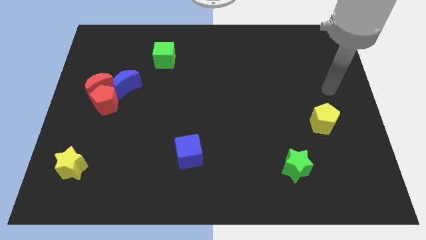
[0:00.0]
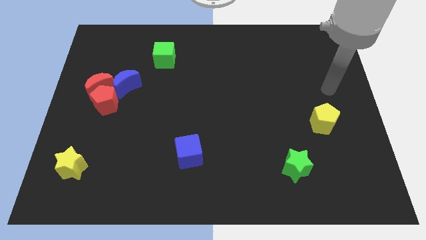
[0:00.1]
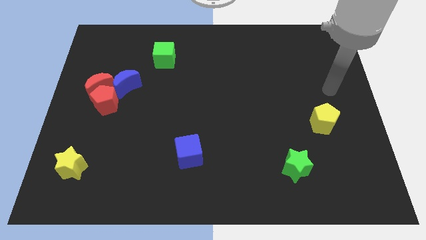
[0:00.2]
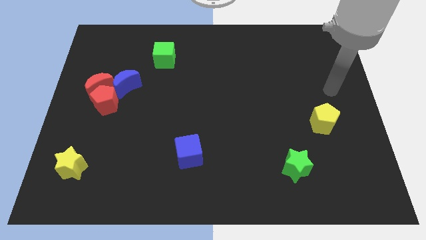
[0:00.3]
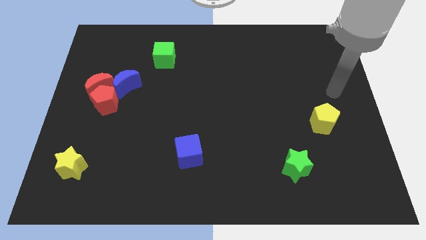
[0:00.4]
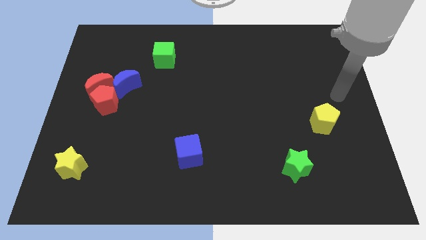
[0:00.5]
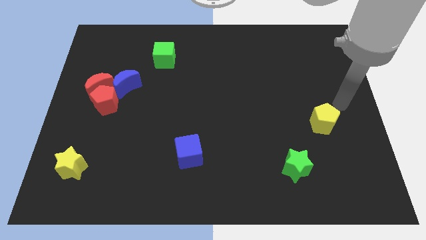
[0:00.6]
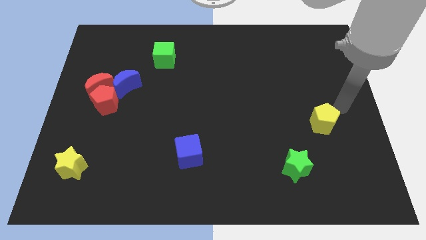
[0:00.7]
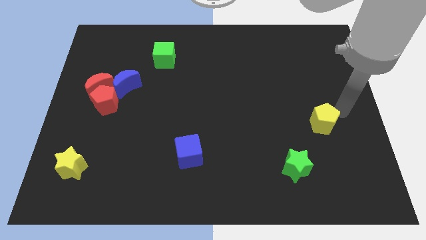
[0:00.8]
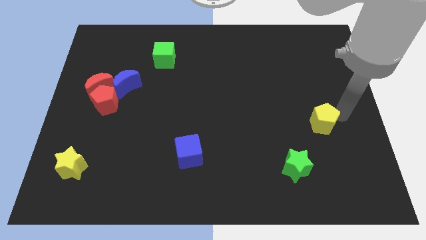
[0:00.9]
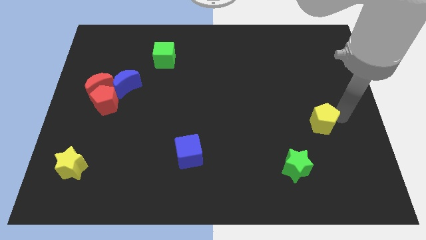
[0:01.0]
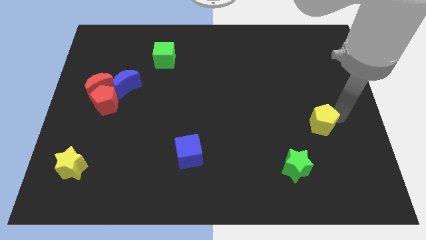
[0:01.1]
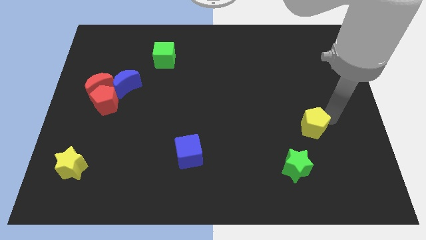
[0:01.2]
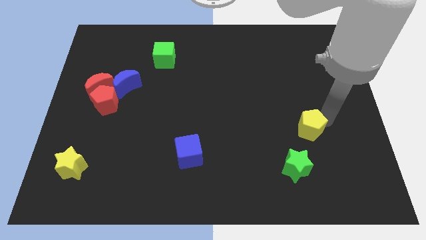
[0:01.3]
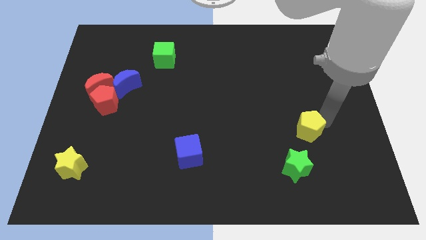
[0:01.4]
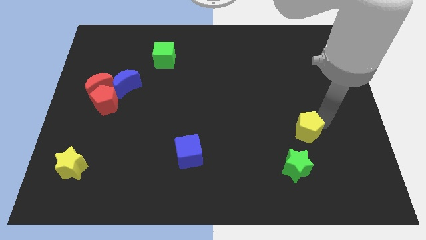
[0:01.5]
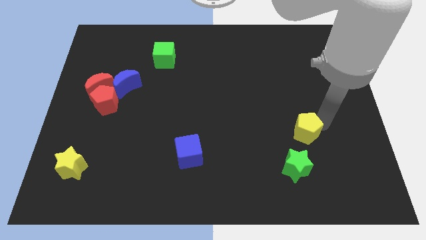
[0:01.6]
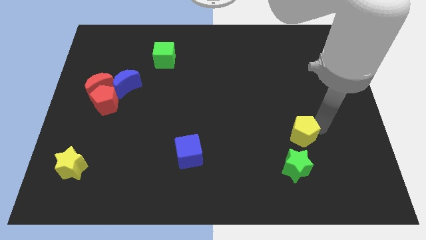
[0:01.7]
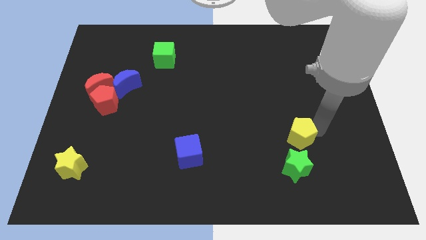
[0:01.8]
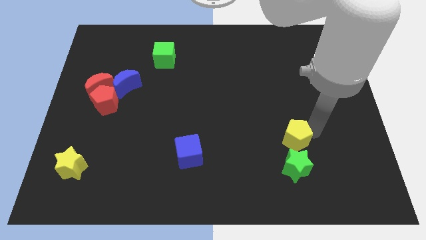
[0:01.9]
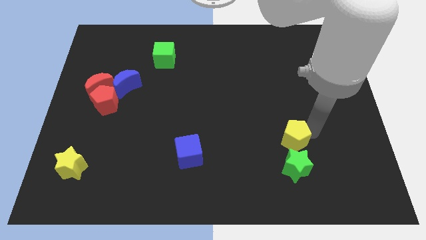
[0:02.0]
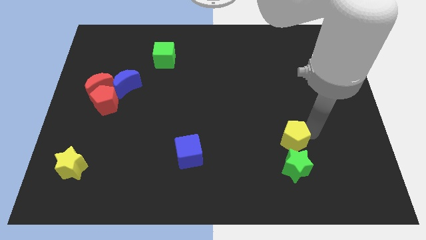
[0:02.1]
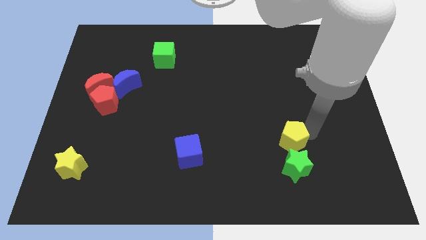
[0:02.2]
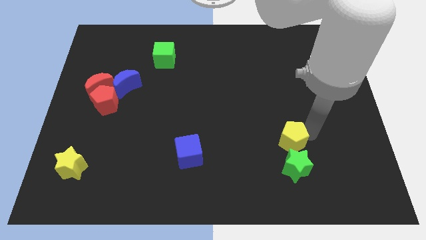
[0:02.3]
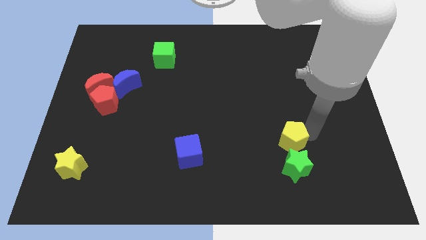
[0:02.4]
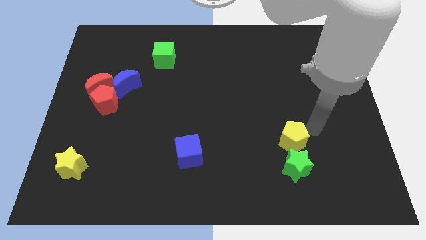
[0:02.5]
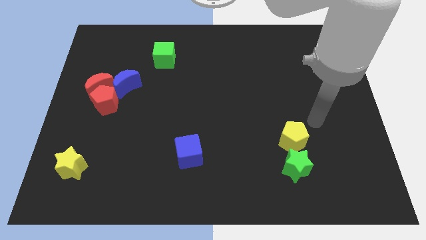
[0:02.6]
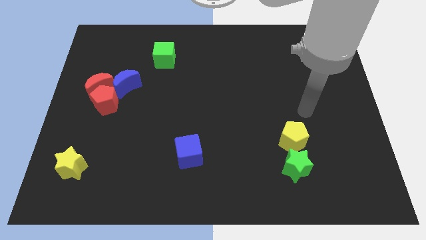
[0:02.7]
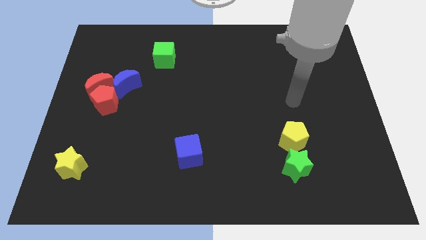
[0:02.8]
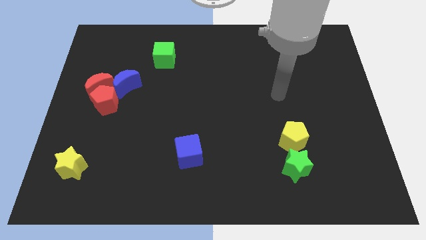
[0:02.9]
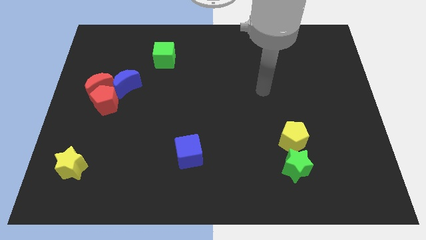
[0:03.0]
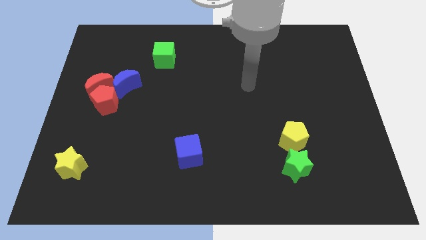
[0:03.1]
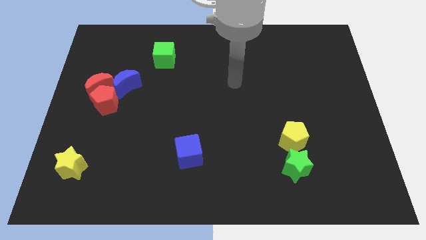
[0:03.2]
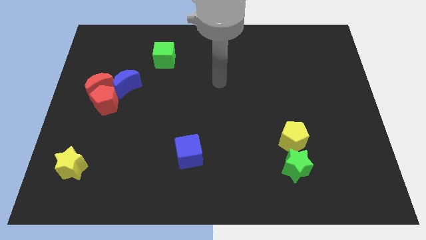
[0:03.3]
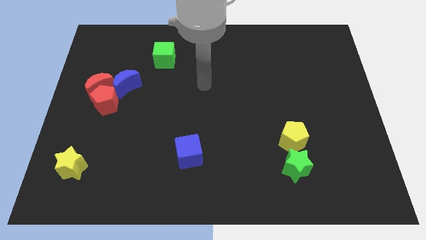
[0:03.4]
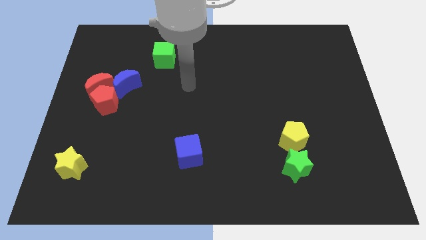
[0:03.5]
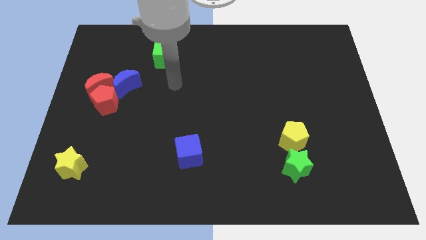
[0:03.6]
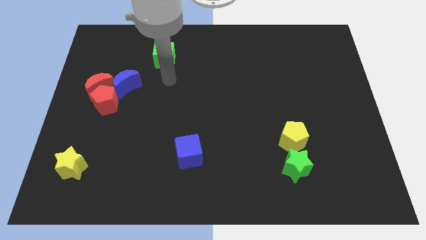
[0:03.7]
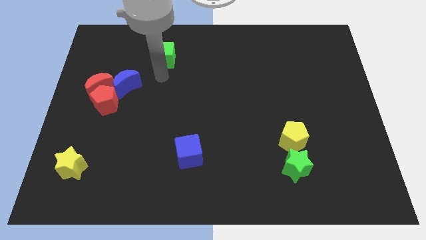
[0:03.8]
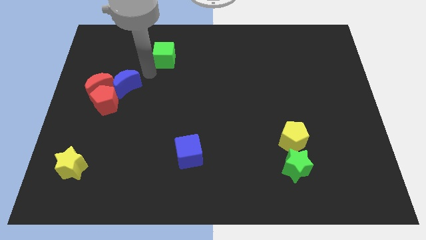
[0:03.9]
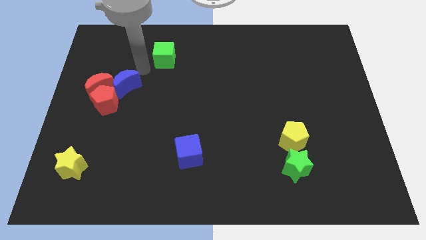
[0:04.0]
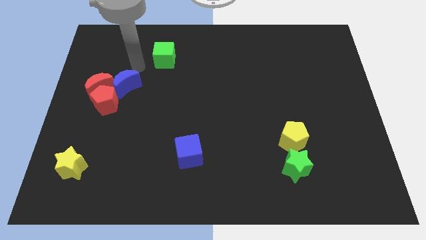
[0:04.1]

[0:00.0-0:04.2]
push the yellow pentagon towards the green star

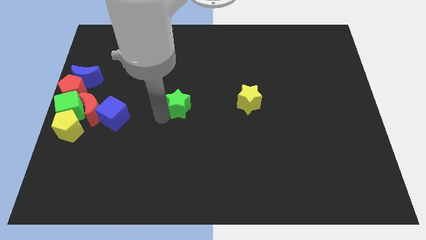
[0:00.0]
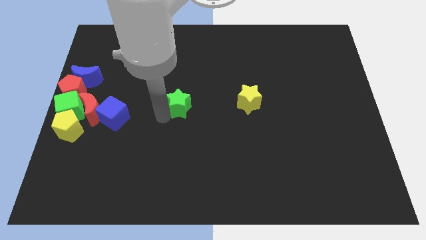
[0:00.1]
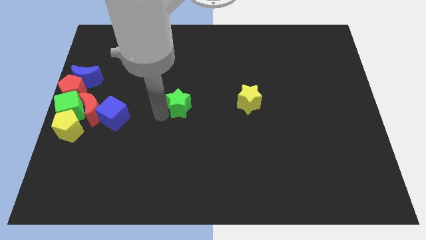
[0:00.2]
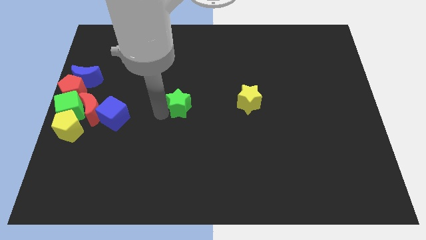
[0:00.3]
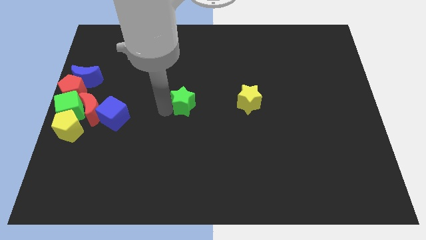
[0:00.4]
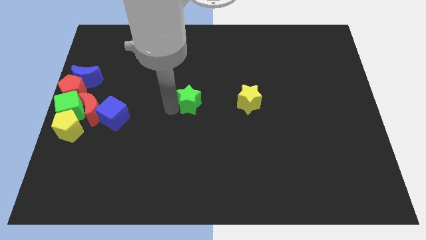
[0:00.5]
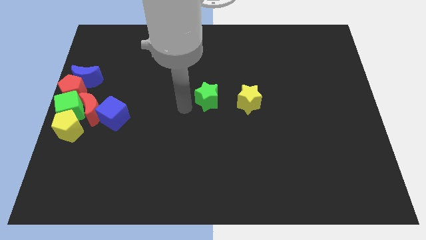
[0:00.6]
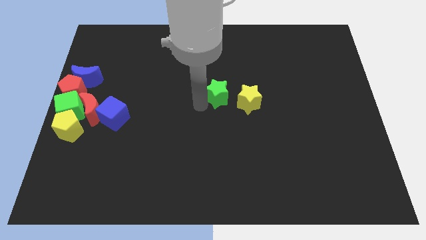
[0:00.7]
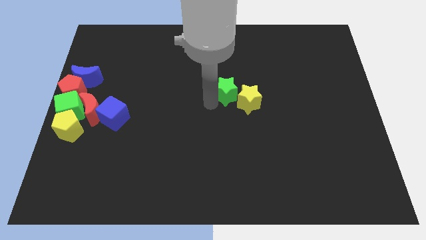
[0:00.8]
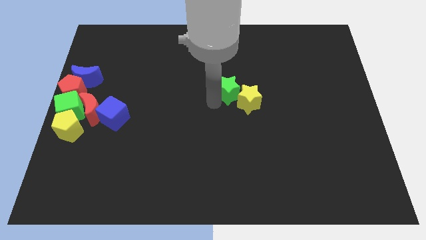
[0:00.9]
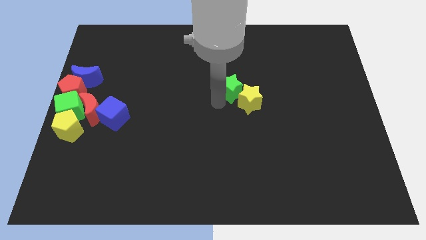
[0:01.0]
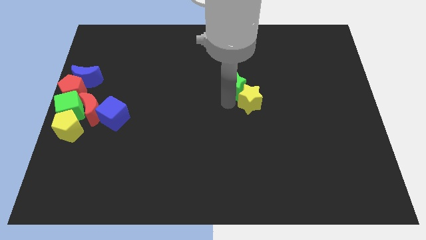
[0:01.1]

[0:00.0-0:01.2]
push the green star into the yellow star

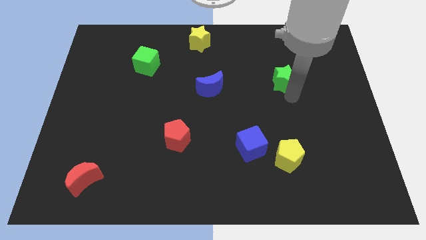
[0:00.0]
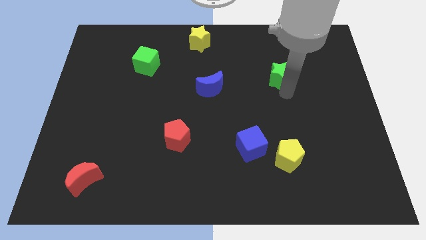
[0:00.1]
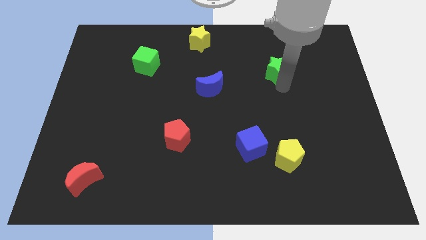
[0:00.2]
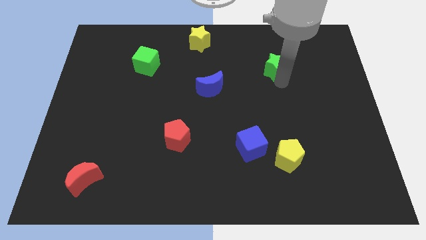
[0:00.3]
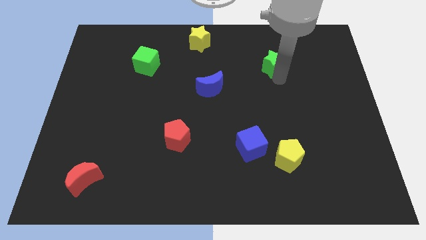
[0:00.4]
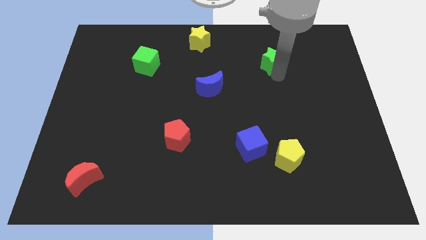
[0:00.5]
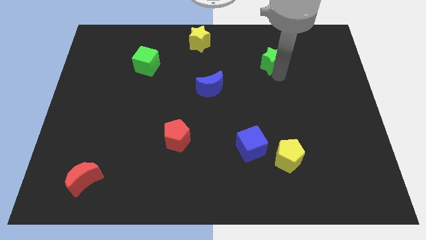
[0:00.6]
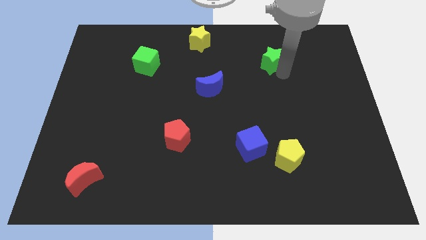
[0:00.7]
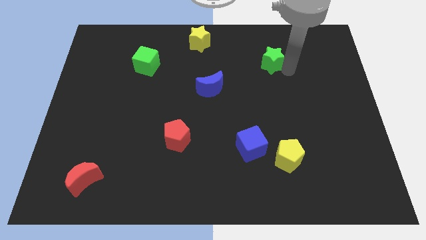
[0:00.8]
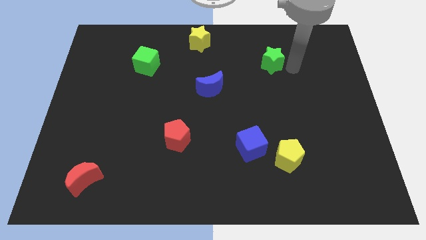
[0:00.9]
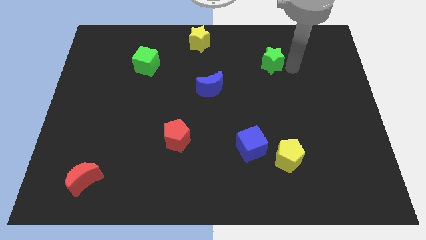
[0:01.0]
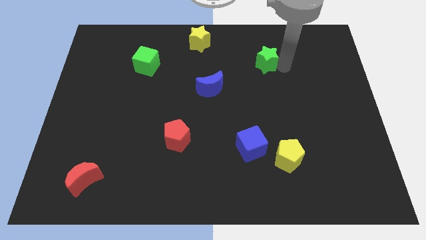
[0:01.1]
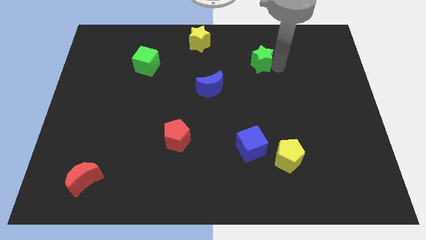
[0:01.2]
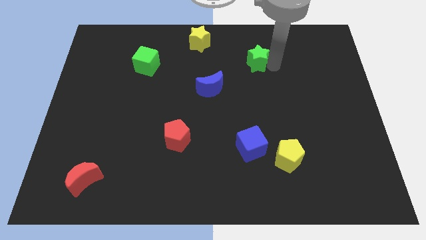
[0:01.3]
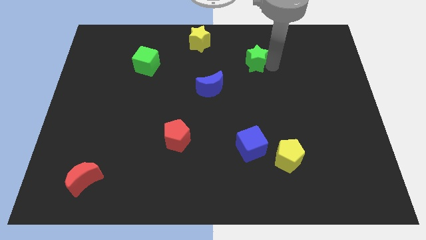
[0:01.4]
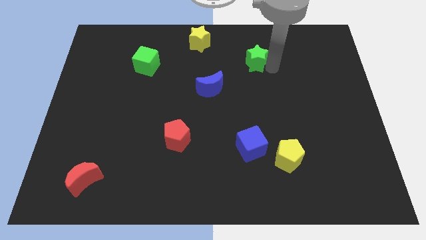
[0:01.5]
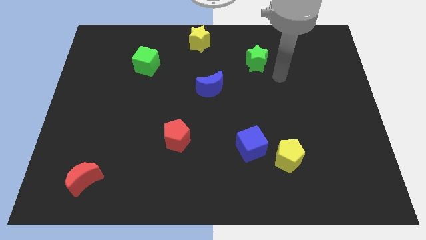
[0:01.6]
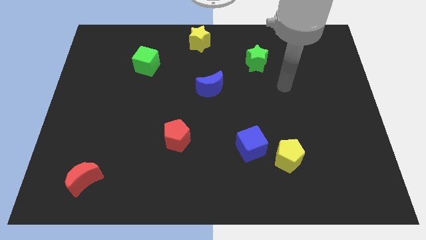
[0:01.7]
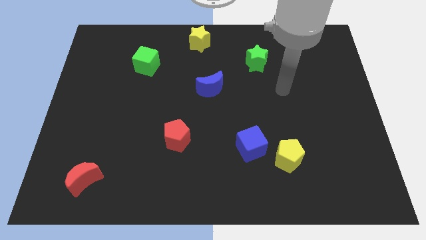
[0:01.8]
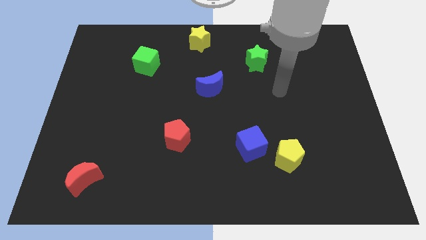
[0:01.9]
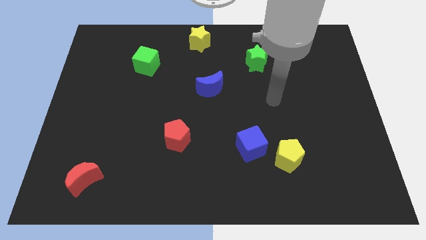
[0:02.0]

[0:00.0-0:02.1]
move green star diagonal to blue moon

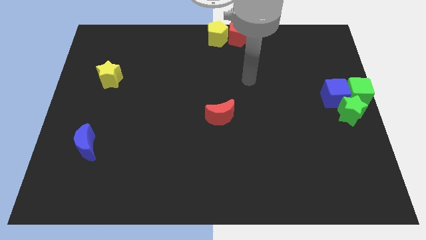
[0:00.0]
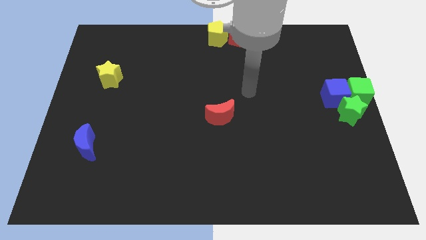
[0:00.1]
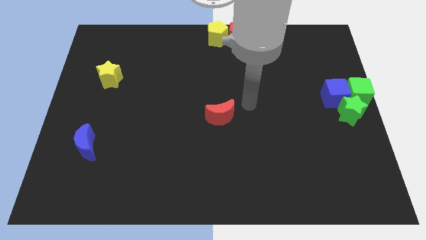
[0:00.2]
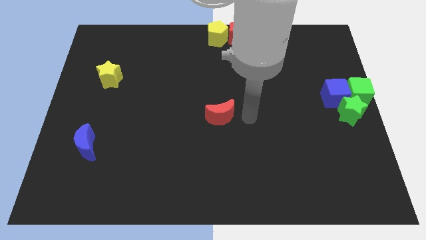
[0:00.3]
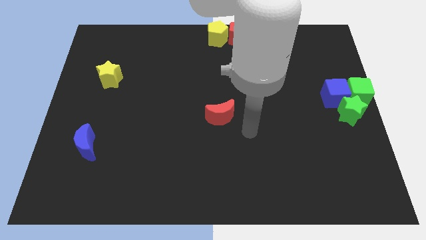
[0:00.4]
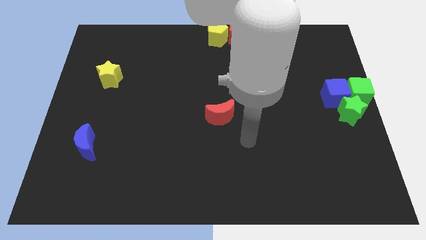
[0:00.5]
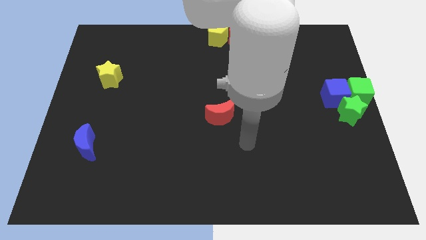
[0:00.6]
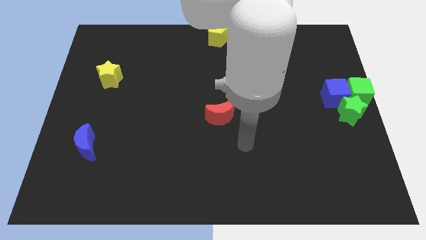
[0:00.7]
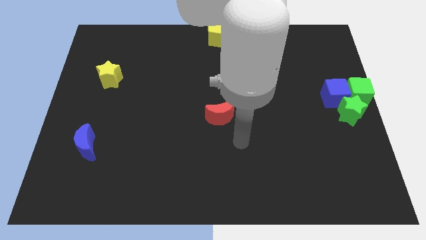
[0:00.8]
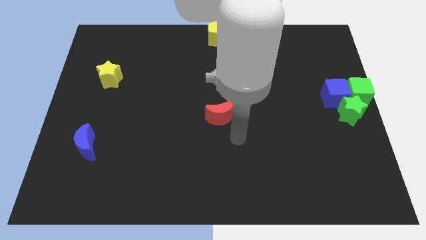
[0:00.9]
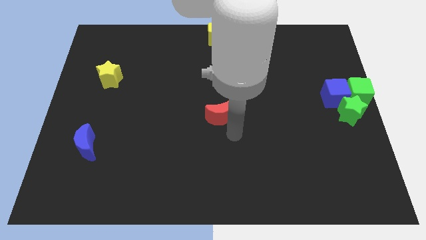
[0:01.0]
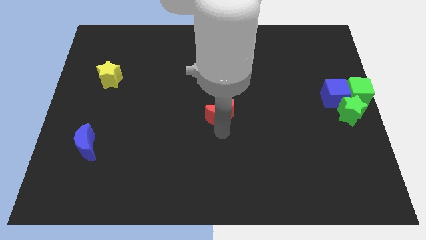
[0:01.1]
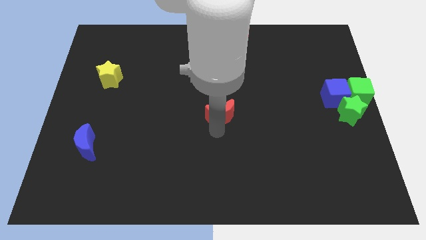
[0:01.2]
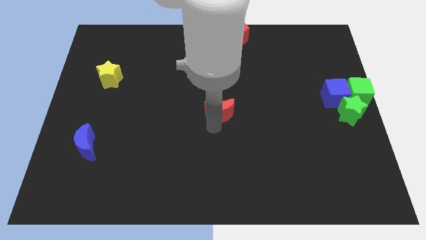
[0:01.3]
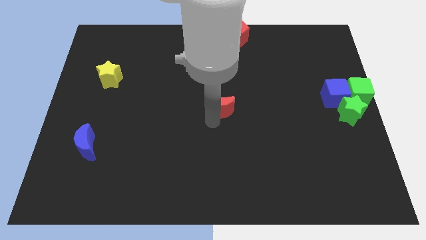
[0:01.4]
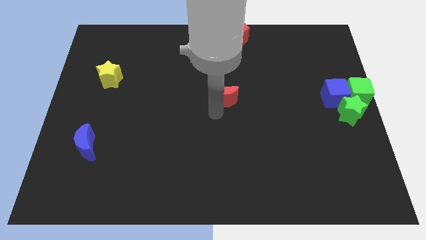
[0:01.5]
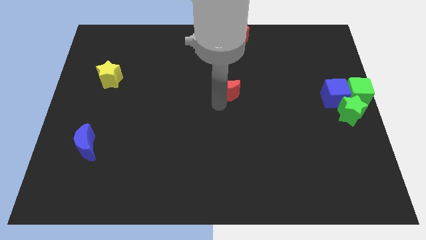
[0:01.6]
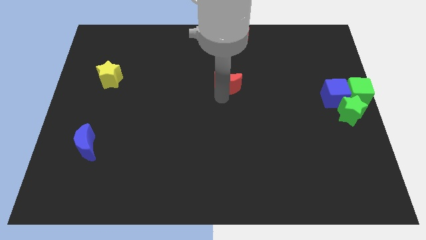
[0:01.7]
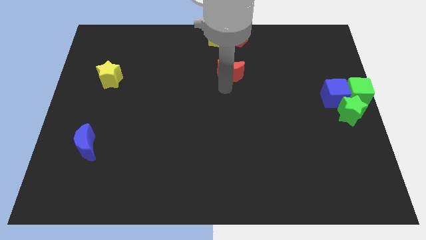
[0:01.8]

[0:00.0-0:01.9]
move the red moon slightly up
